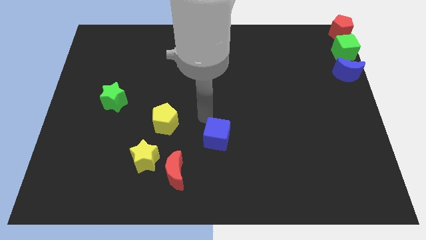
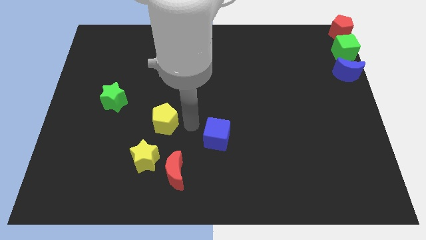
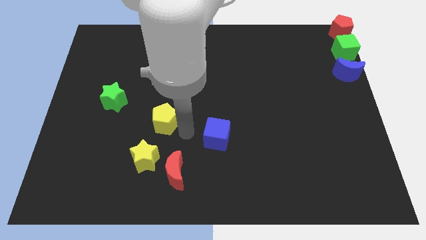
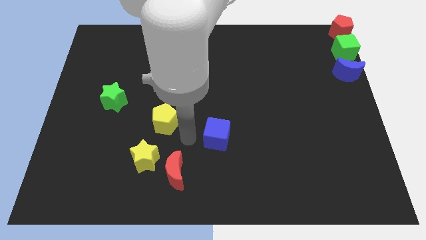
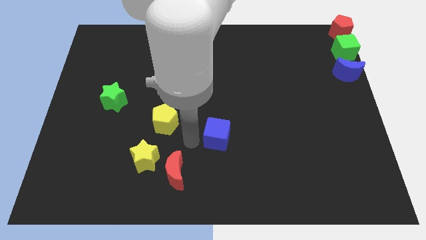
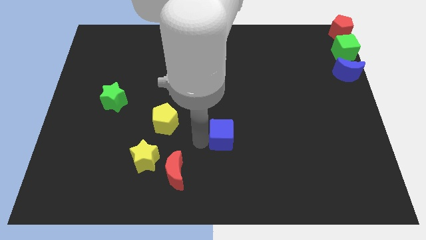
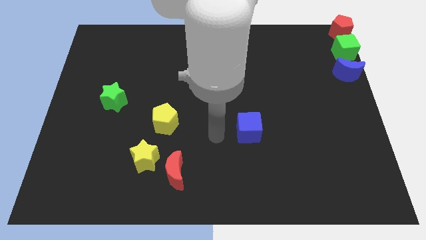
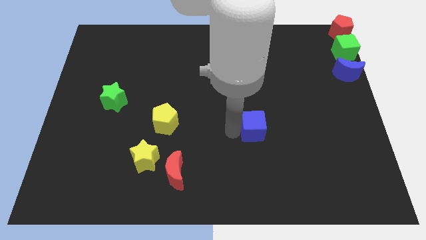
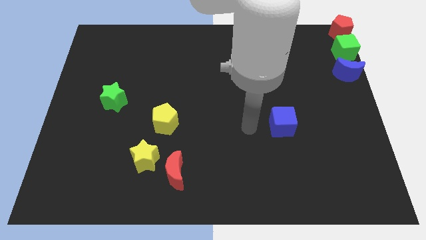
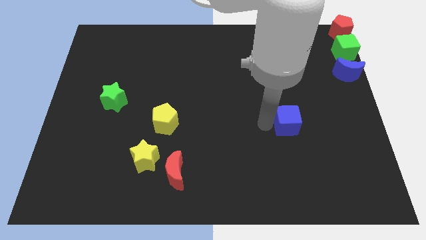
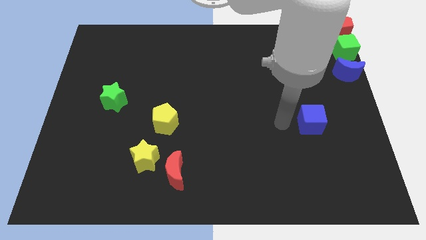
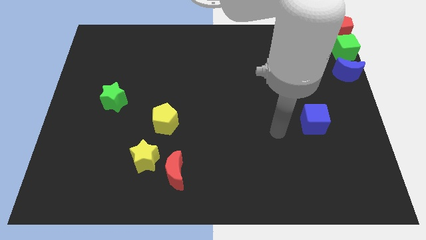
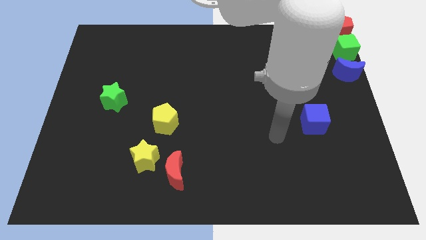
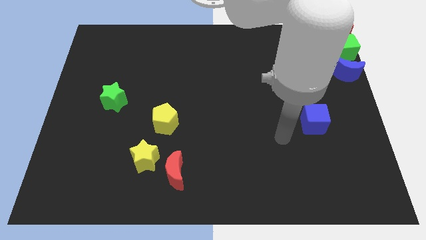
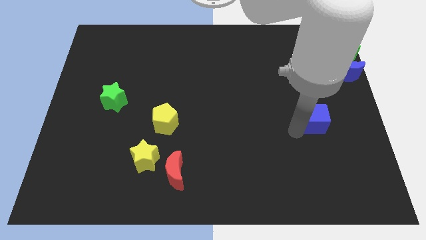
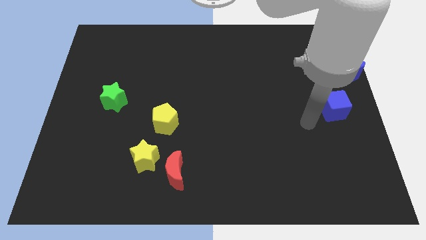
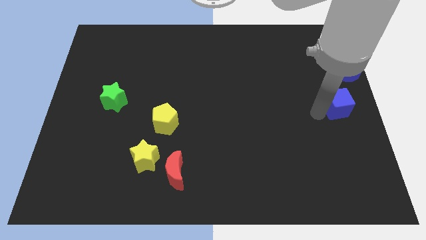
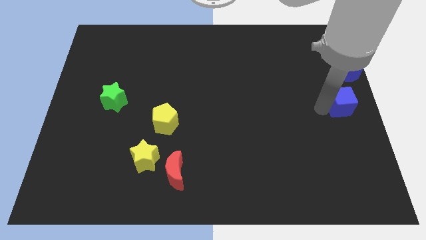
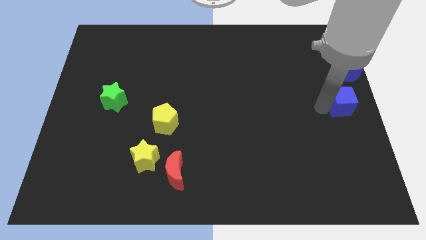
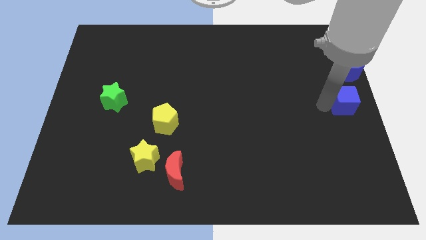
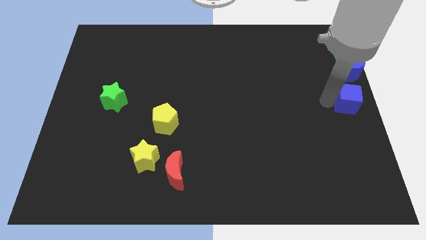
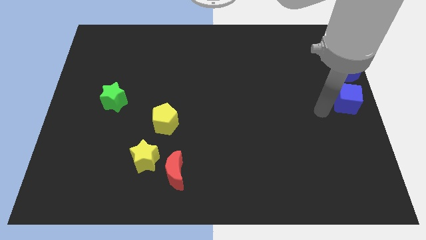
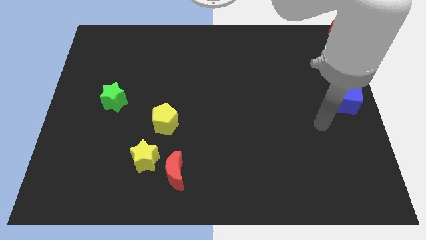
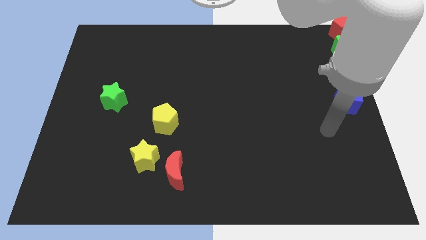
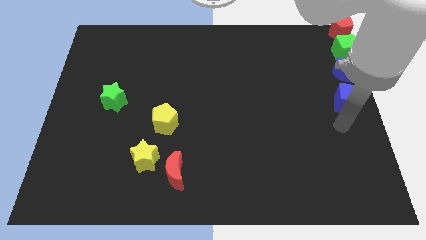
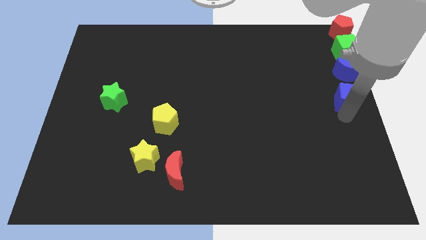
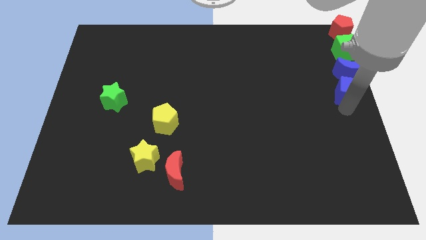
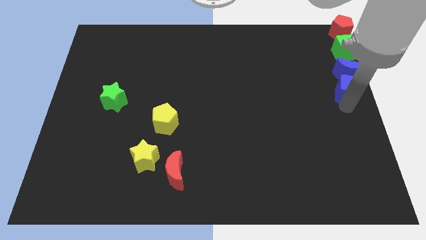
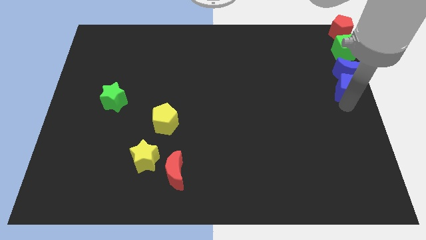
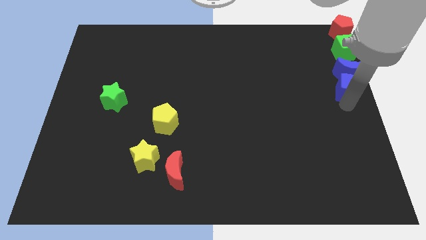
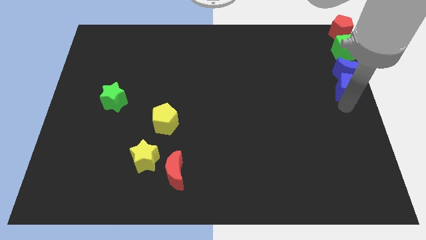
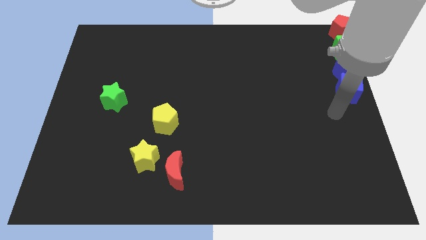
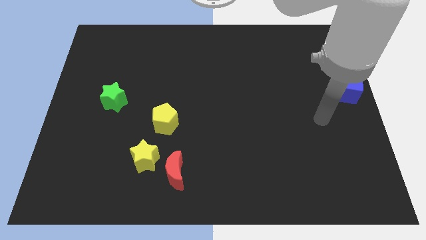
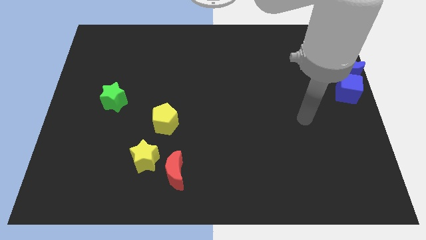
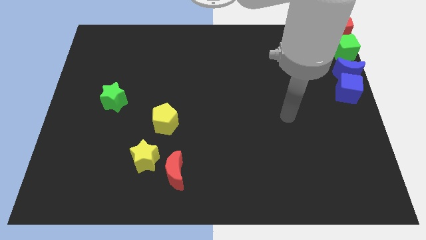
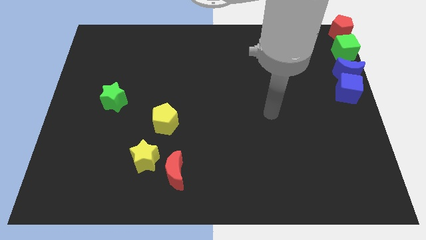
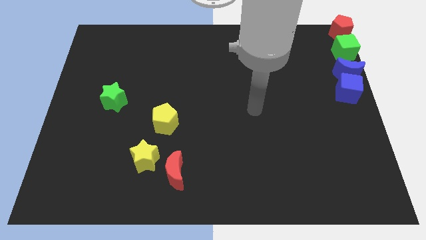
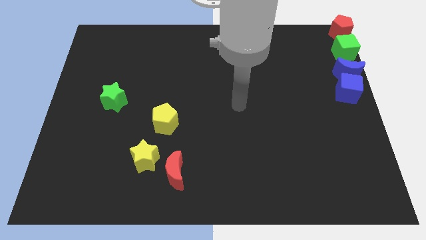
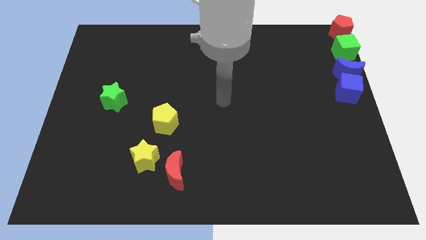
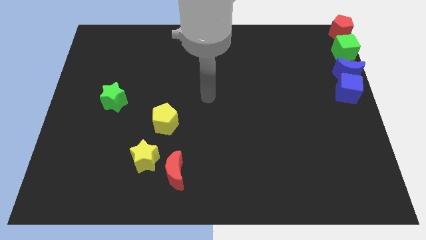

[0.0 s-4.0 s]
move the blue cube into the group of blocks

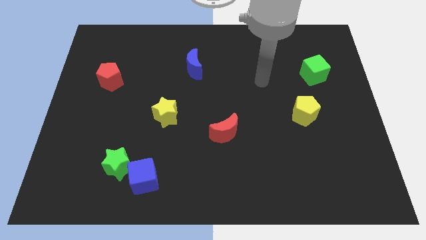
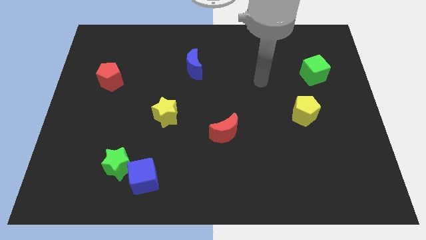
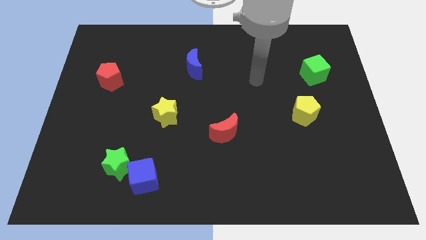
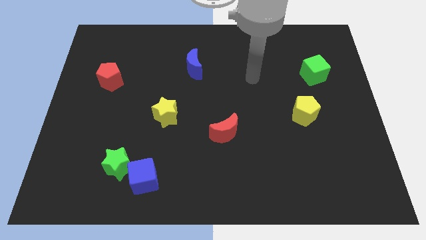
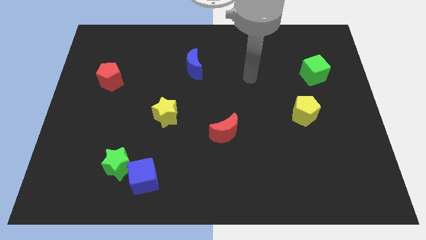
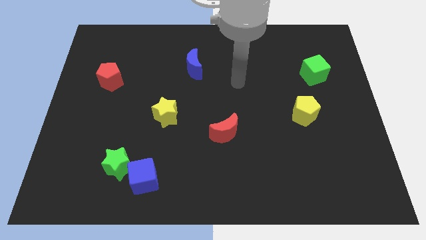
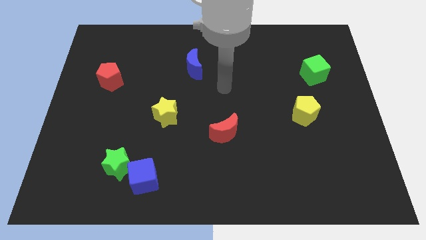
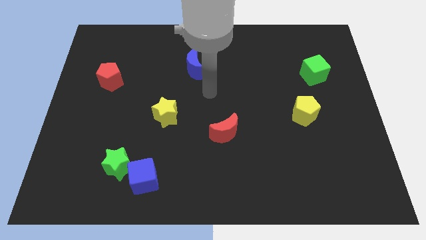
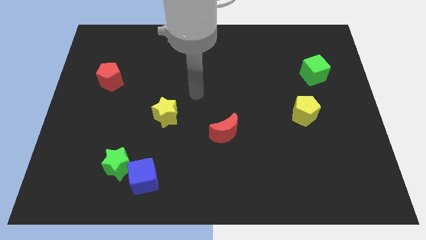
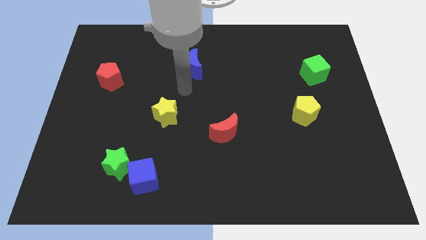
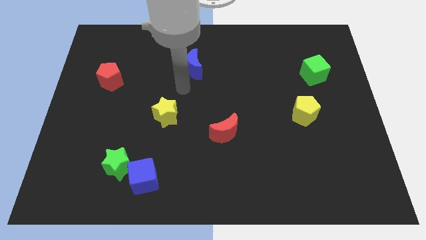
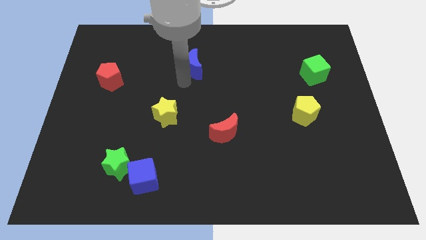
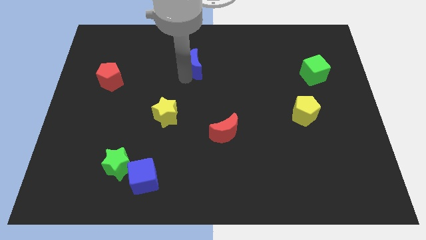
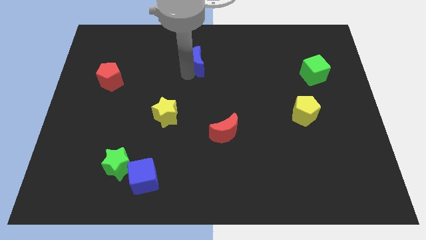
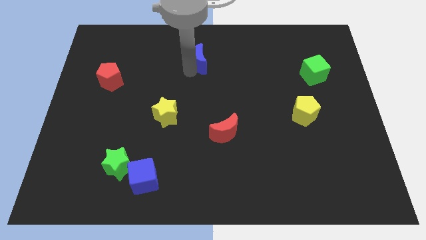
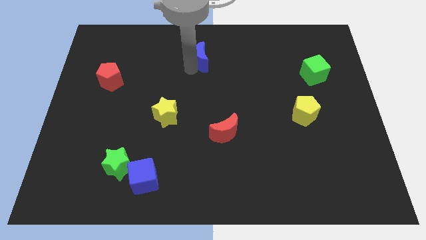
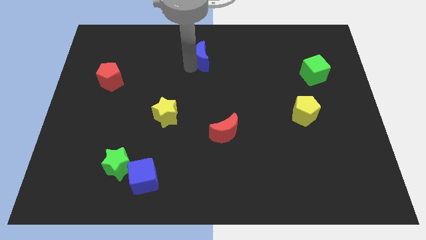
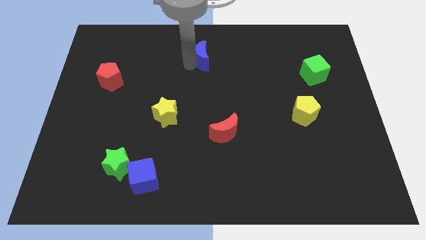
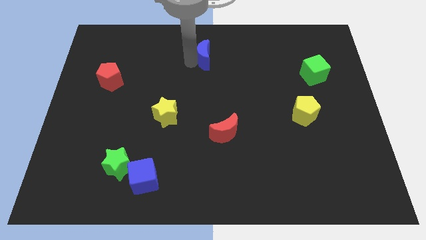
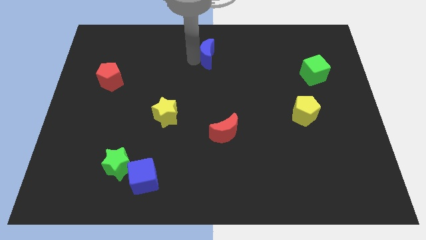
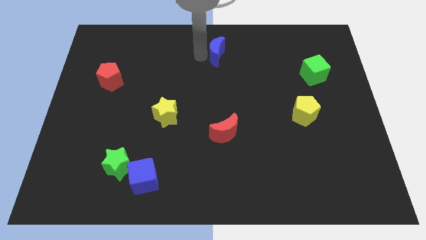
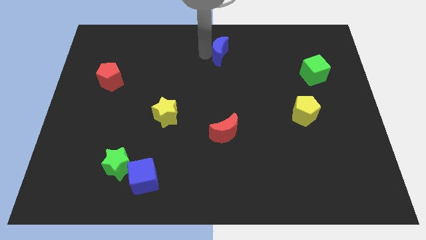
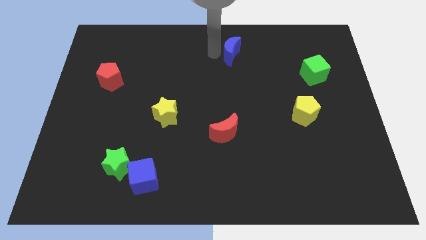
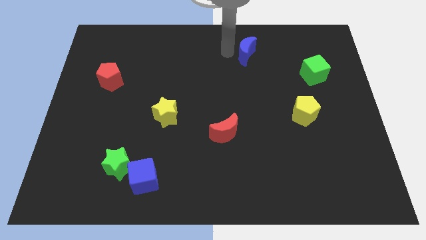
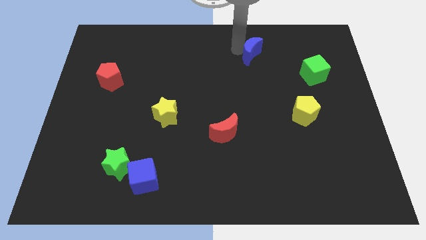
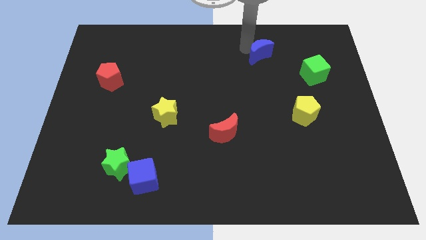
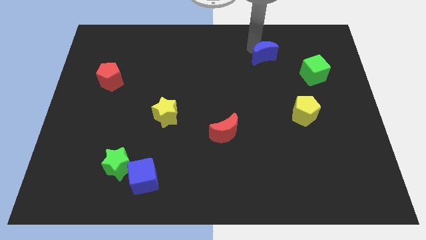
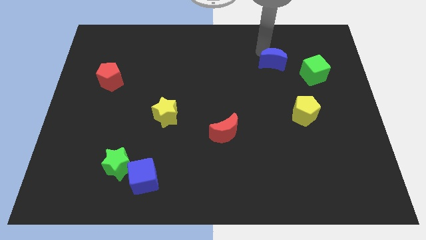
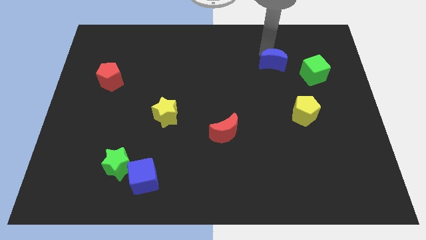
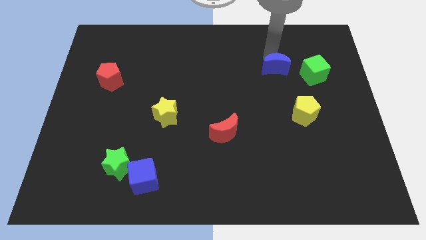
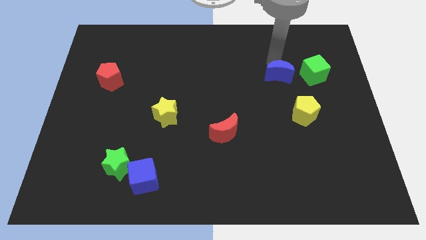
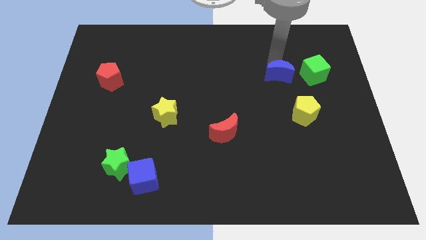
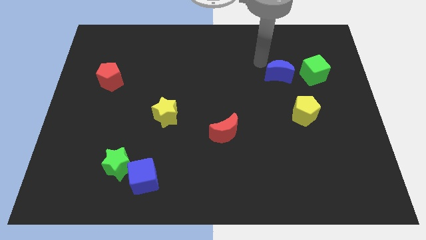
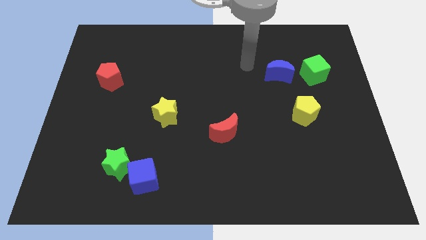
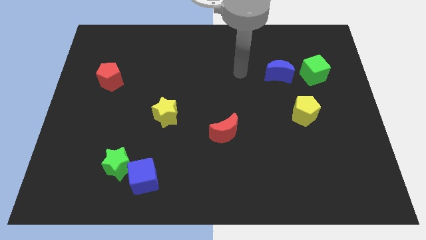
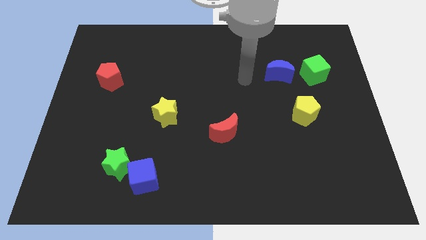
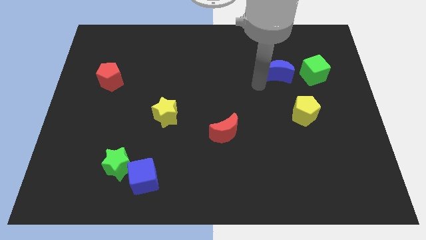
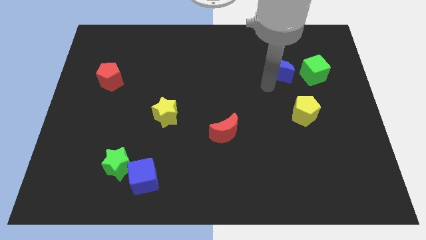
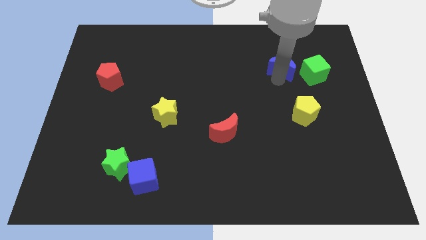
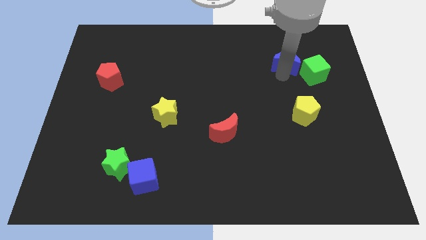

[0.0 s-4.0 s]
place the blue crescent to the to left of green cube

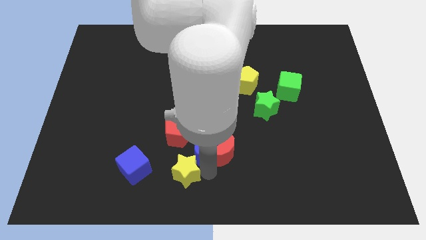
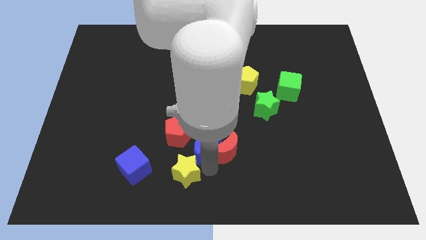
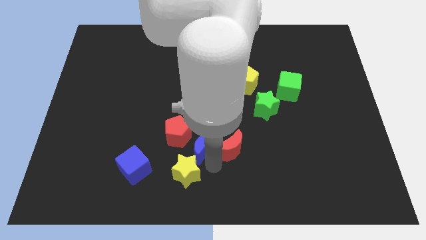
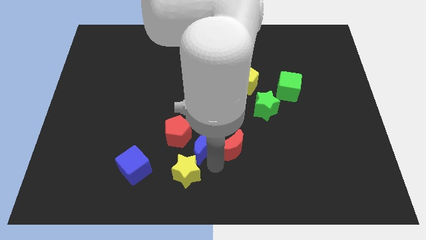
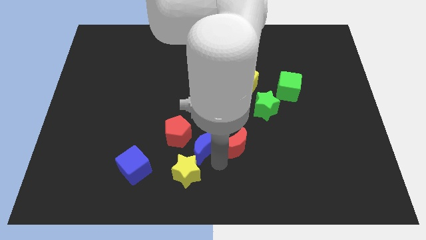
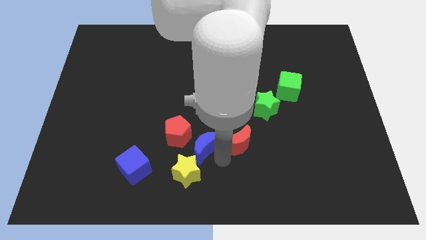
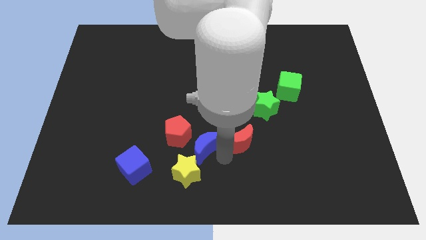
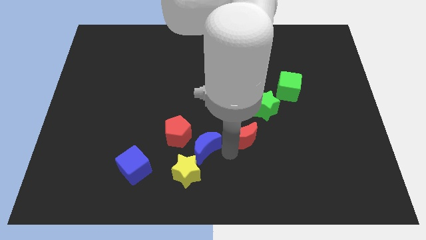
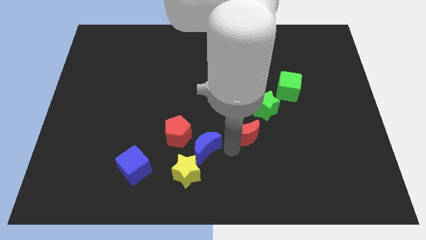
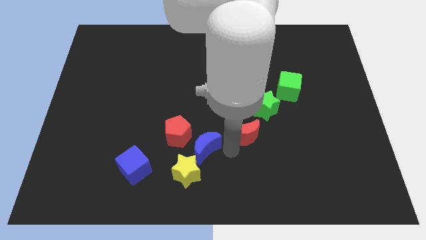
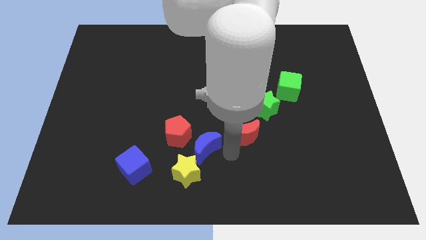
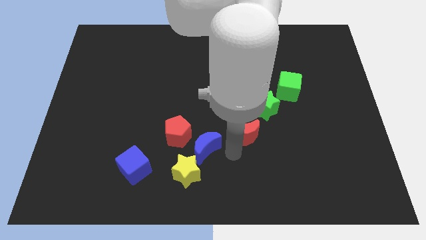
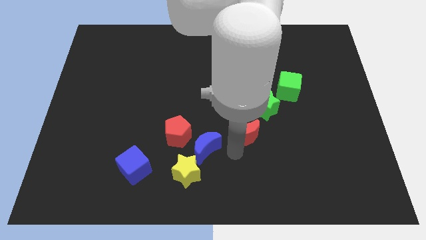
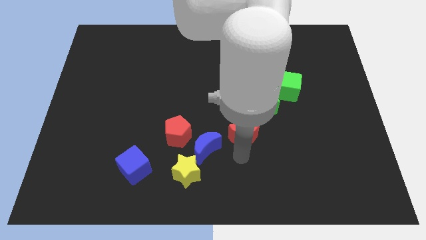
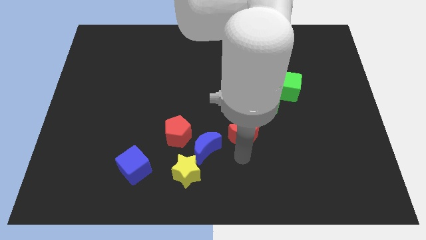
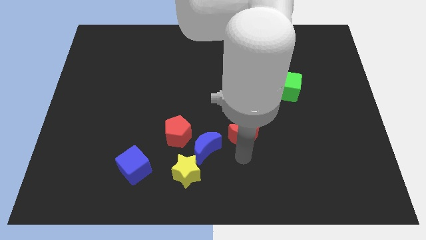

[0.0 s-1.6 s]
put the red moon between the blue moon and green star
